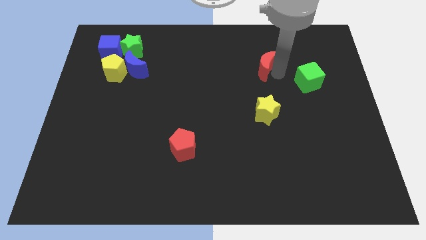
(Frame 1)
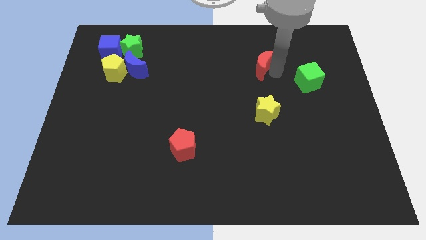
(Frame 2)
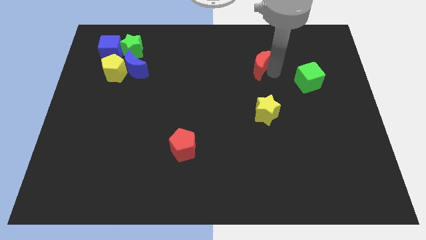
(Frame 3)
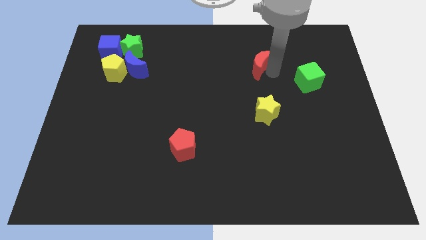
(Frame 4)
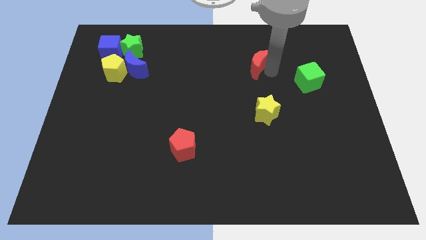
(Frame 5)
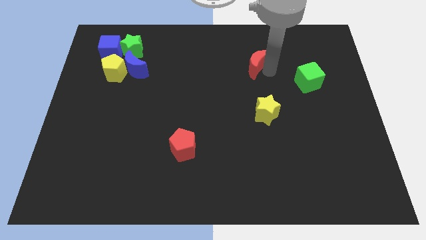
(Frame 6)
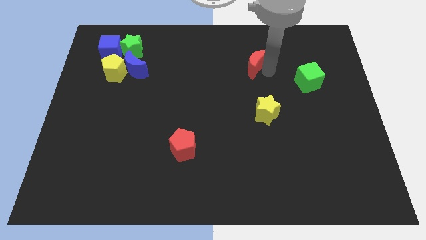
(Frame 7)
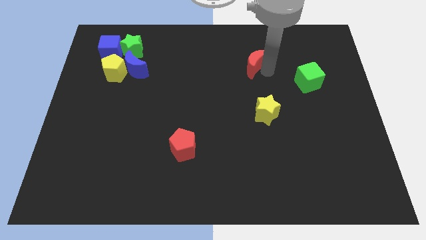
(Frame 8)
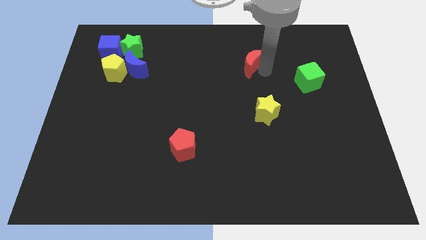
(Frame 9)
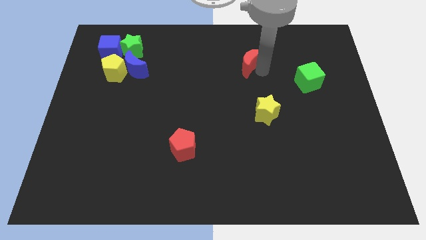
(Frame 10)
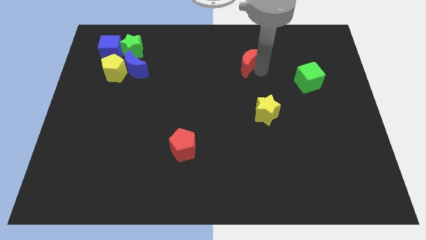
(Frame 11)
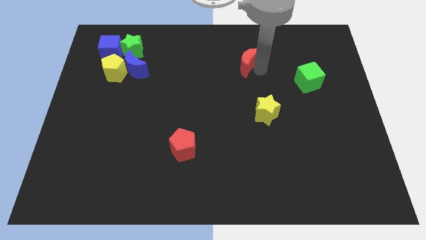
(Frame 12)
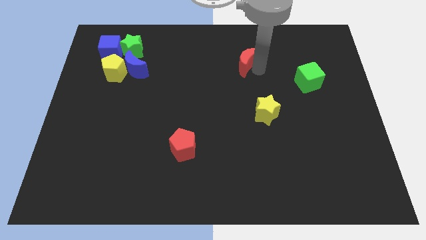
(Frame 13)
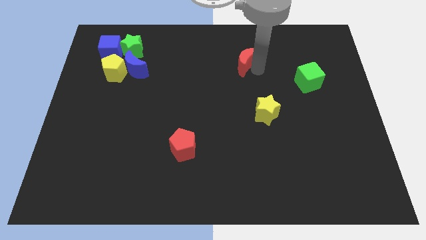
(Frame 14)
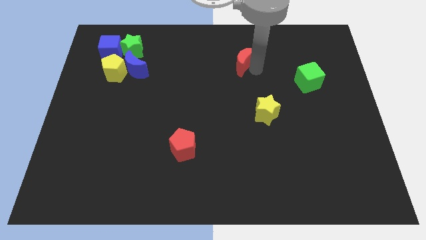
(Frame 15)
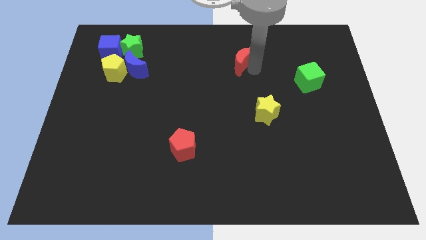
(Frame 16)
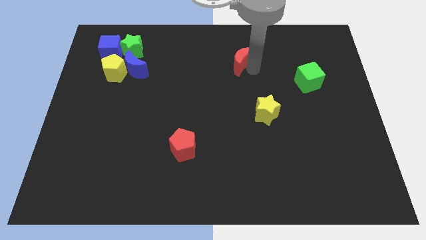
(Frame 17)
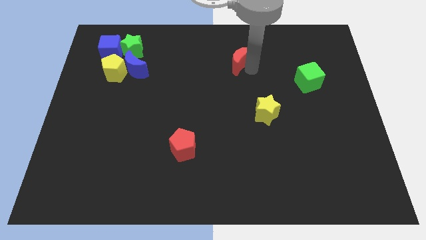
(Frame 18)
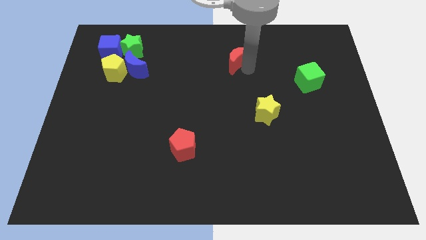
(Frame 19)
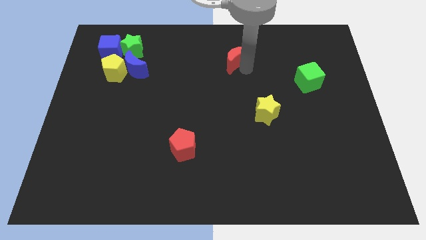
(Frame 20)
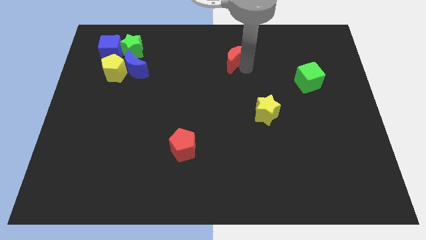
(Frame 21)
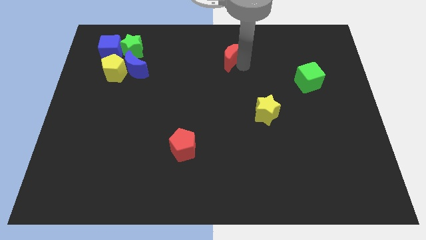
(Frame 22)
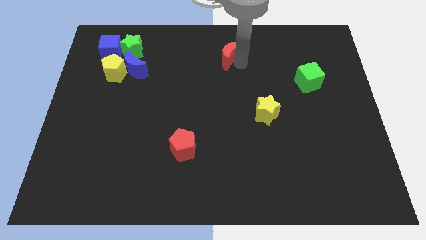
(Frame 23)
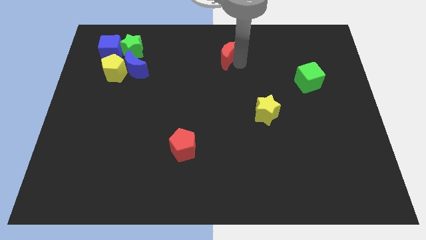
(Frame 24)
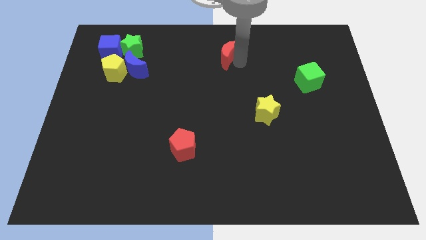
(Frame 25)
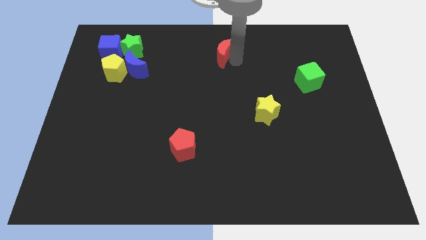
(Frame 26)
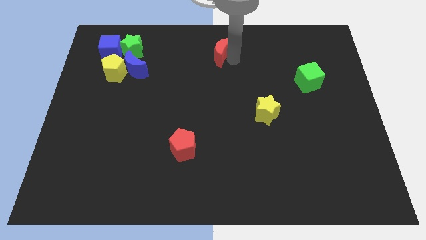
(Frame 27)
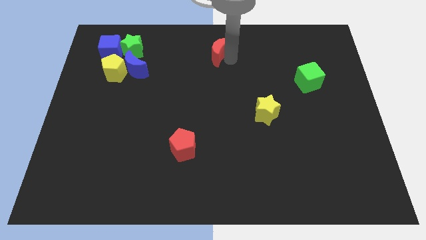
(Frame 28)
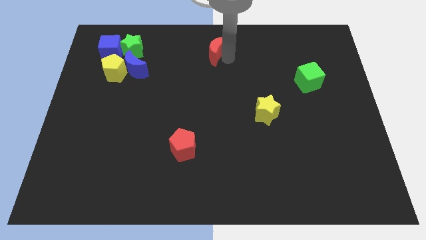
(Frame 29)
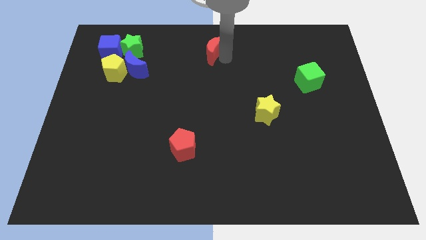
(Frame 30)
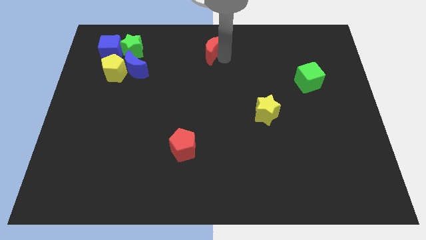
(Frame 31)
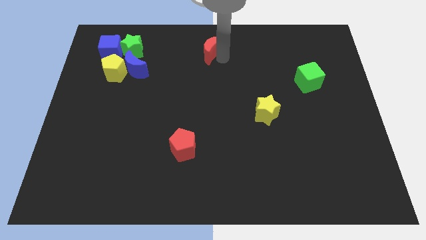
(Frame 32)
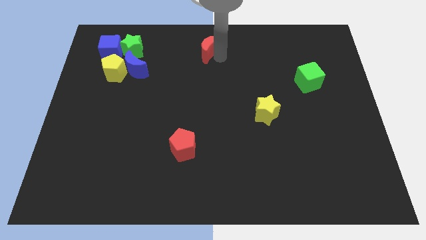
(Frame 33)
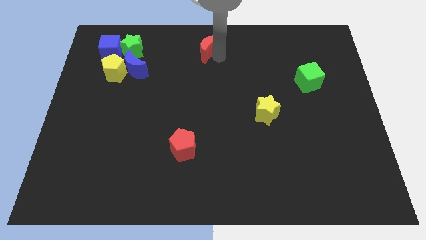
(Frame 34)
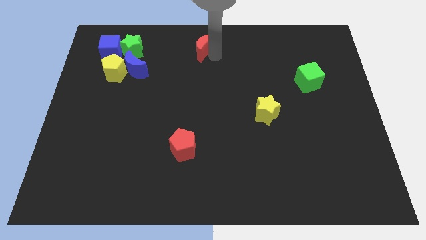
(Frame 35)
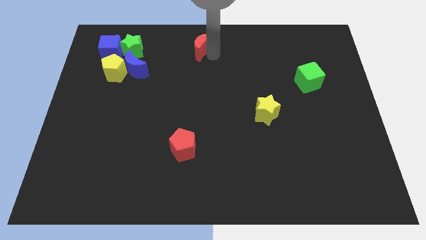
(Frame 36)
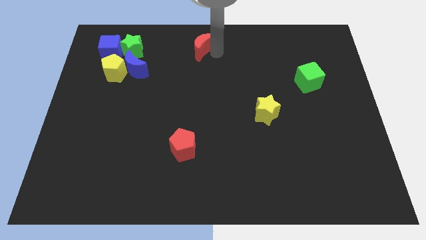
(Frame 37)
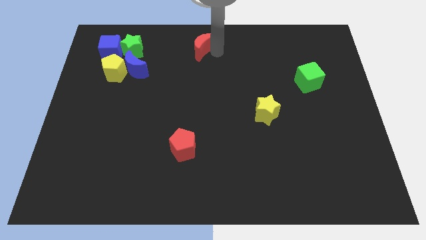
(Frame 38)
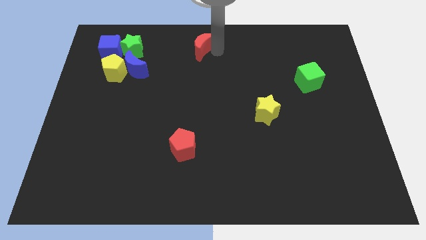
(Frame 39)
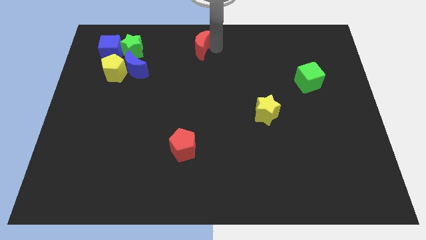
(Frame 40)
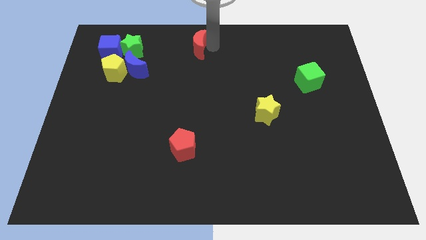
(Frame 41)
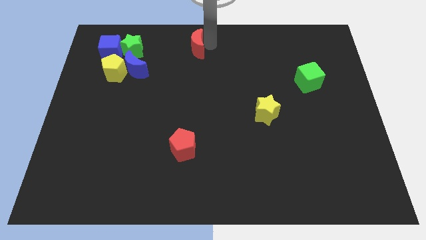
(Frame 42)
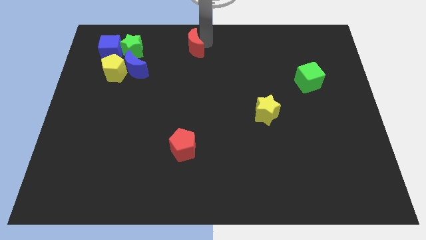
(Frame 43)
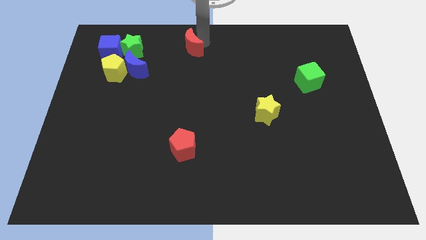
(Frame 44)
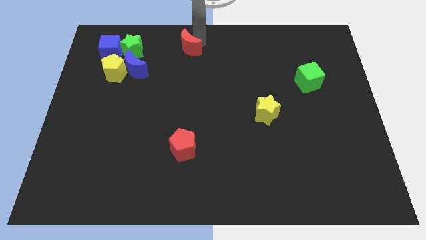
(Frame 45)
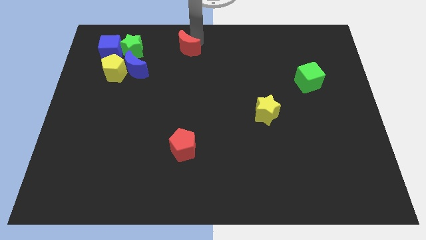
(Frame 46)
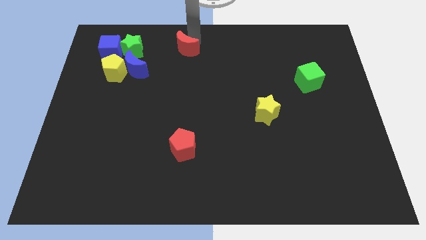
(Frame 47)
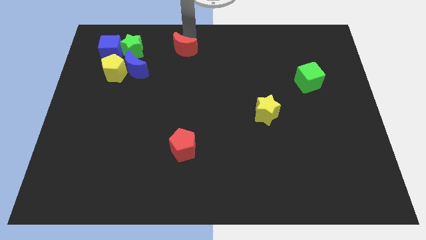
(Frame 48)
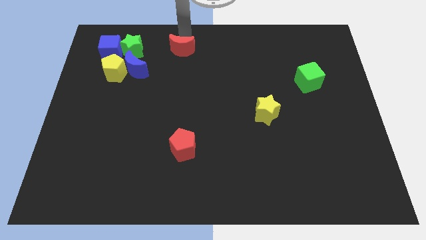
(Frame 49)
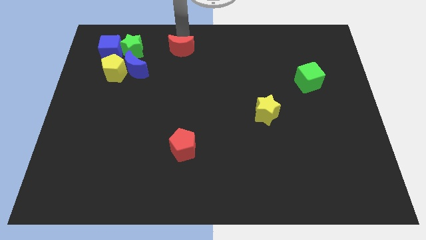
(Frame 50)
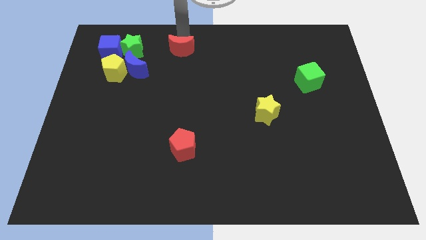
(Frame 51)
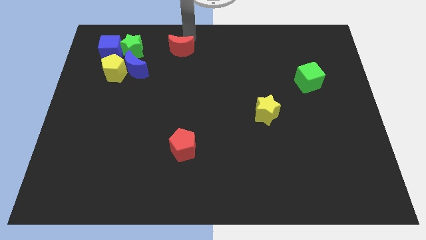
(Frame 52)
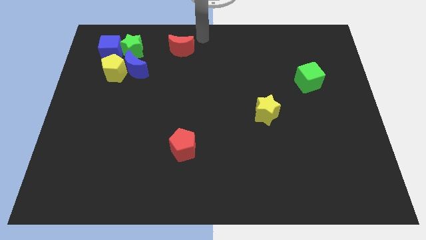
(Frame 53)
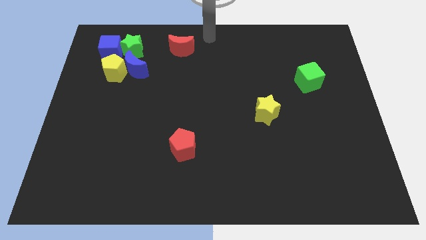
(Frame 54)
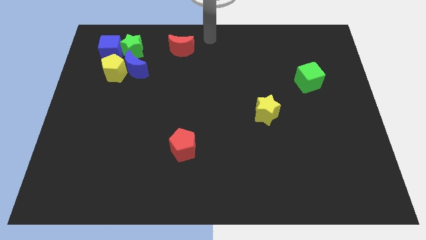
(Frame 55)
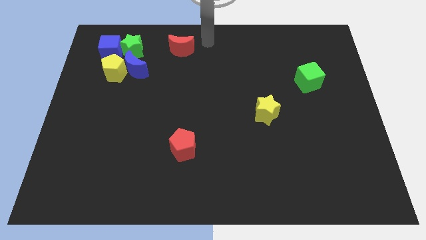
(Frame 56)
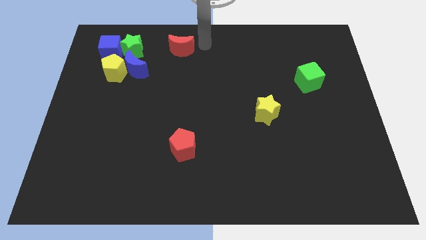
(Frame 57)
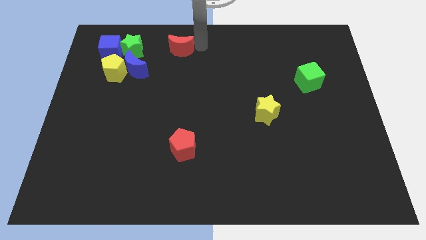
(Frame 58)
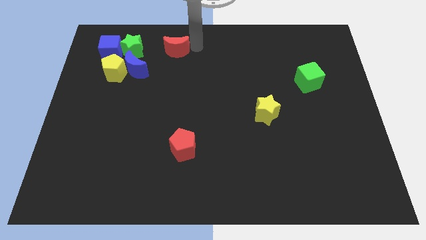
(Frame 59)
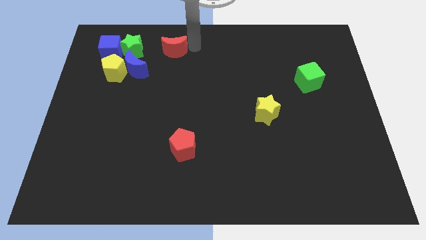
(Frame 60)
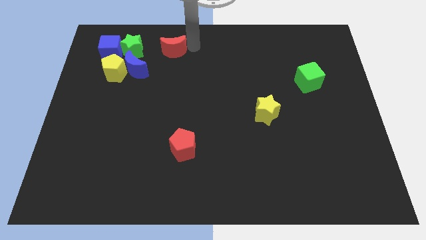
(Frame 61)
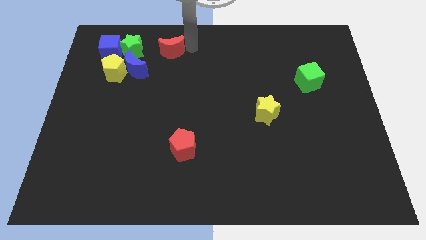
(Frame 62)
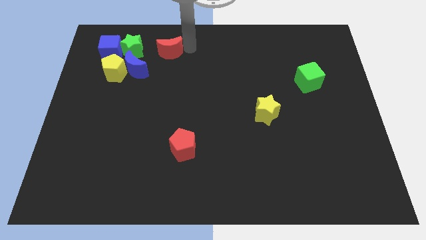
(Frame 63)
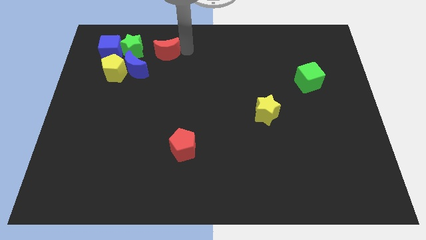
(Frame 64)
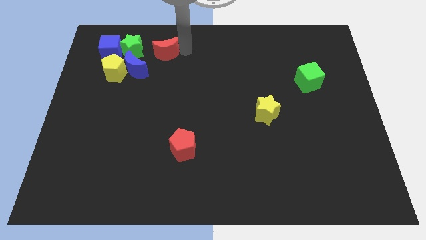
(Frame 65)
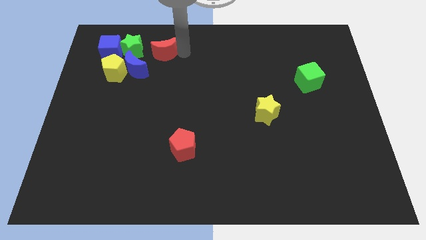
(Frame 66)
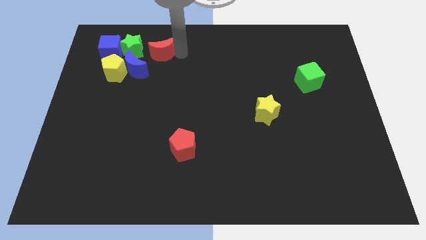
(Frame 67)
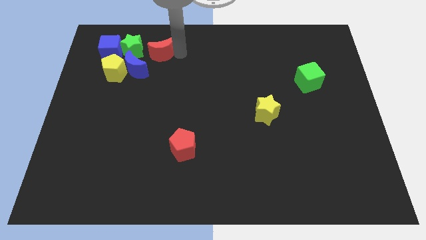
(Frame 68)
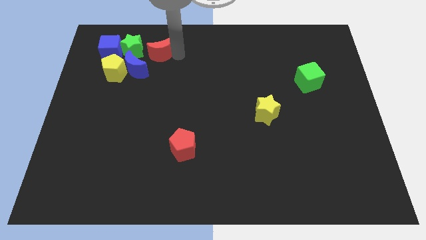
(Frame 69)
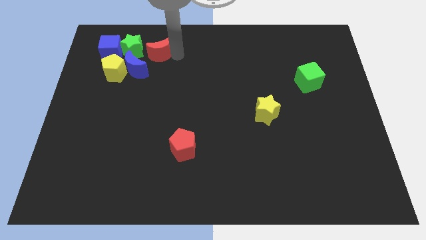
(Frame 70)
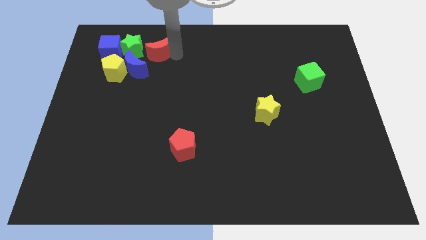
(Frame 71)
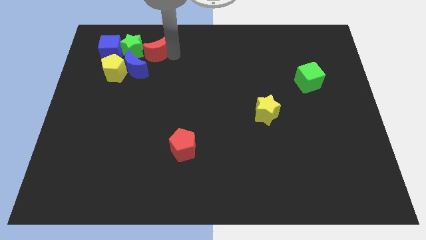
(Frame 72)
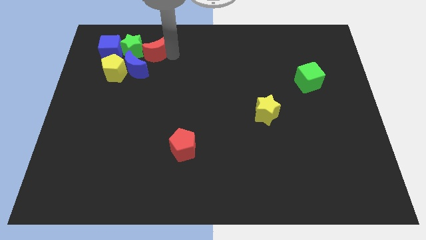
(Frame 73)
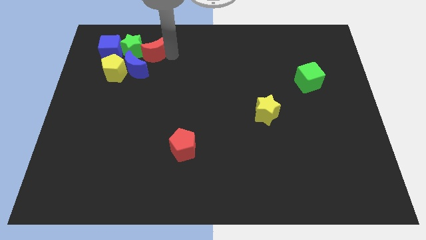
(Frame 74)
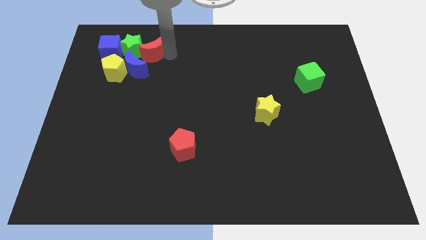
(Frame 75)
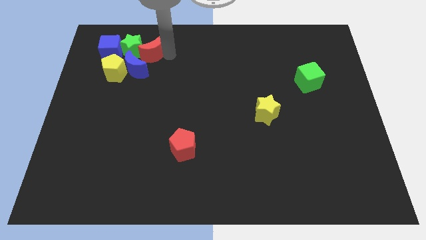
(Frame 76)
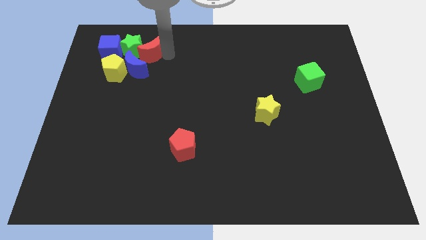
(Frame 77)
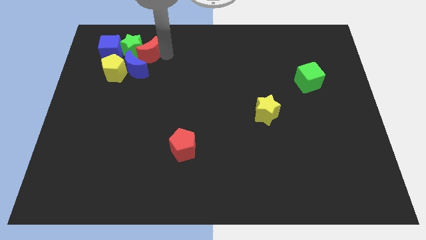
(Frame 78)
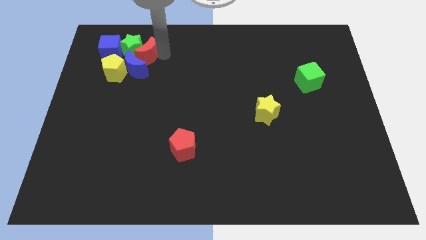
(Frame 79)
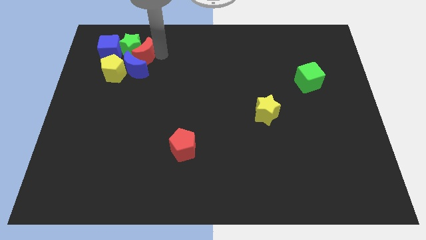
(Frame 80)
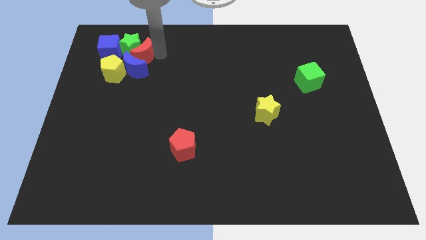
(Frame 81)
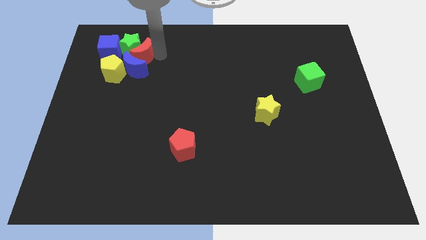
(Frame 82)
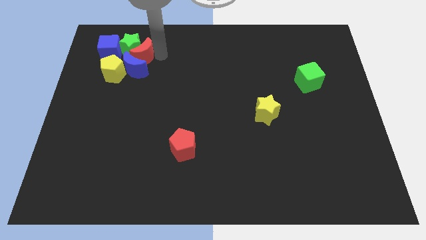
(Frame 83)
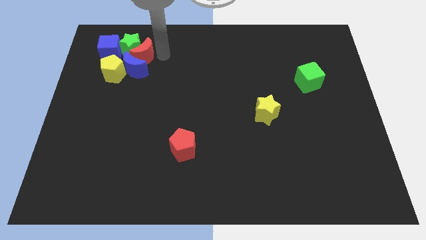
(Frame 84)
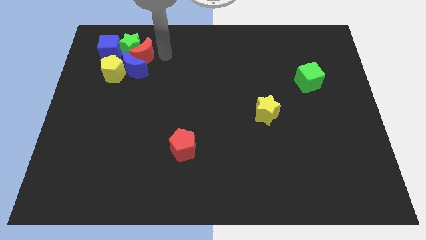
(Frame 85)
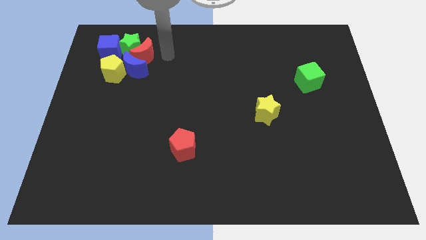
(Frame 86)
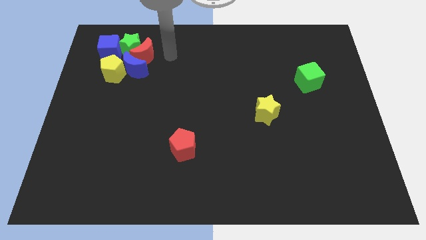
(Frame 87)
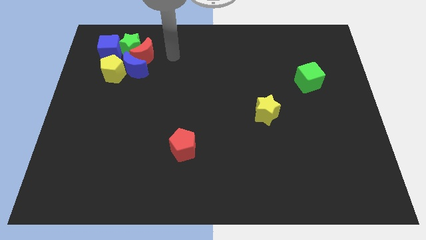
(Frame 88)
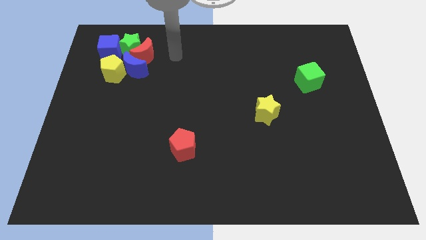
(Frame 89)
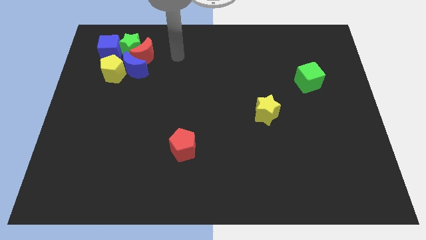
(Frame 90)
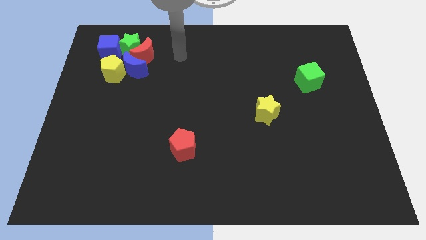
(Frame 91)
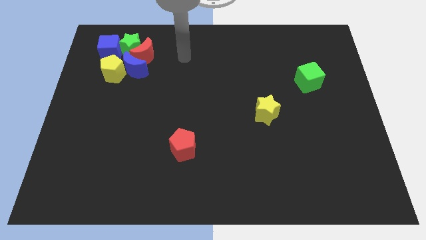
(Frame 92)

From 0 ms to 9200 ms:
push the red moon into the group of blocks
